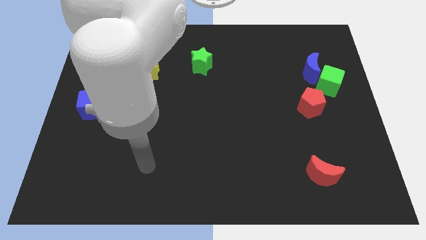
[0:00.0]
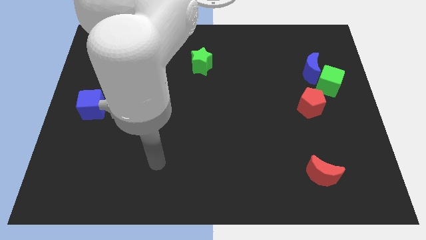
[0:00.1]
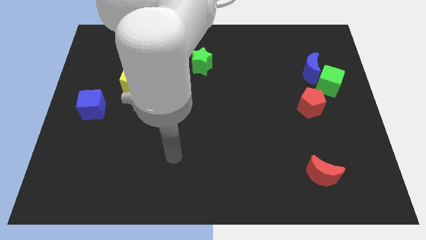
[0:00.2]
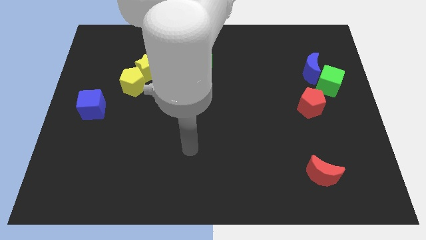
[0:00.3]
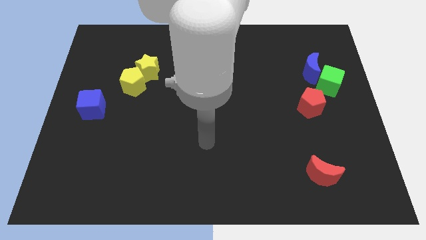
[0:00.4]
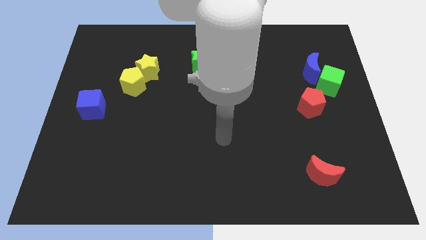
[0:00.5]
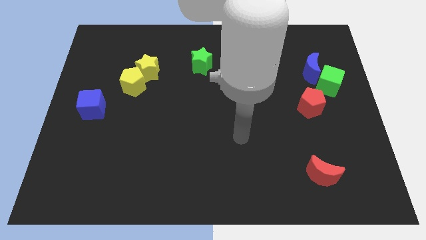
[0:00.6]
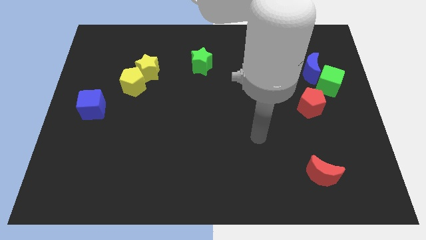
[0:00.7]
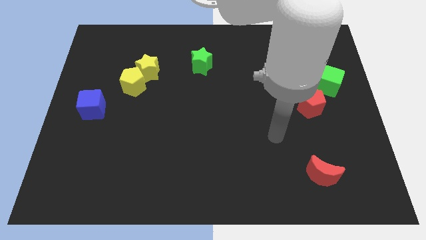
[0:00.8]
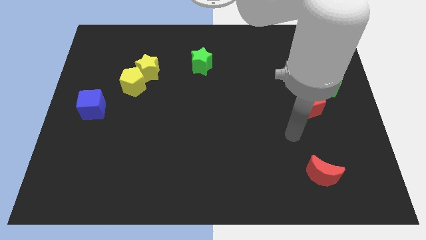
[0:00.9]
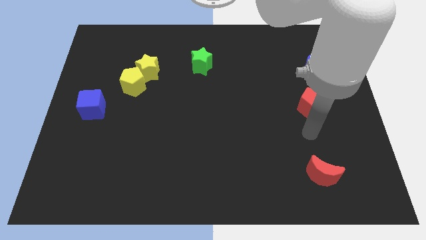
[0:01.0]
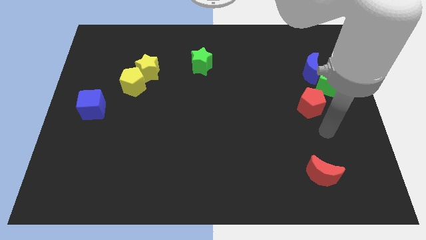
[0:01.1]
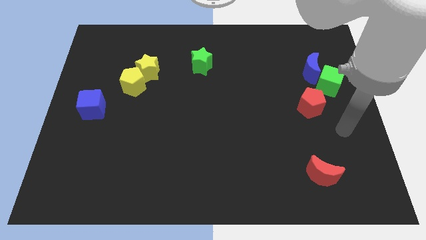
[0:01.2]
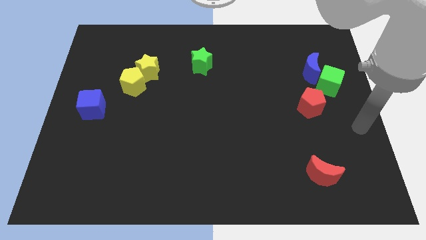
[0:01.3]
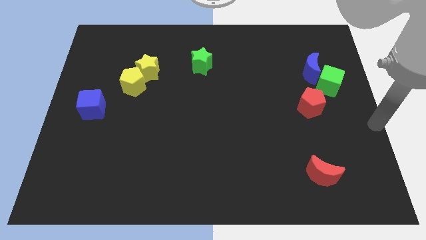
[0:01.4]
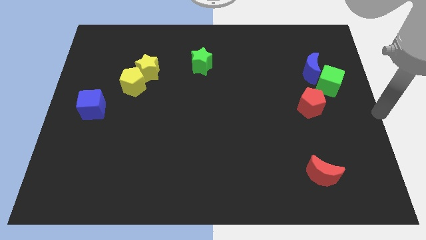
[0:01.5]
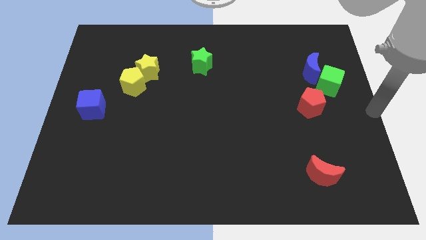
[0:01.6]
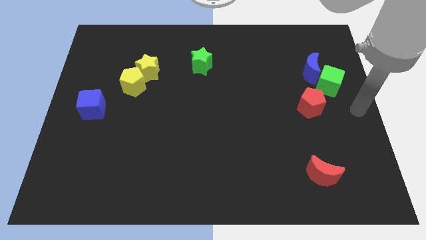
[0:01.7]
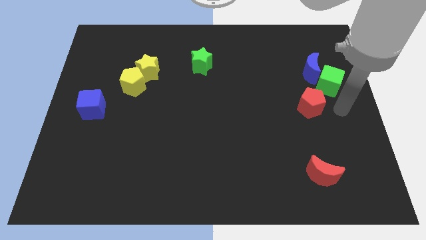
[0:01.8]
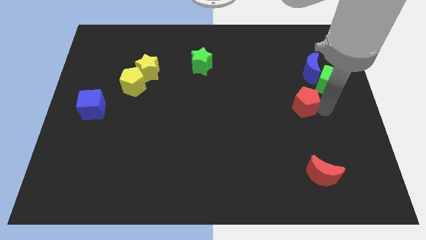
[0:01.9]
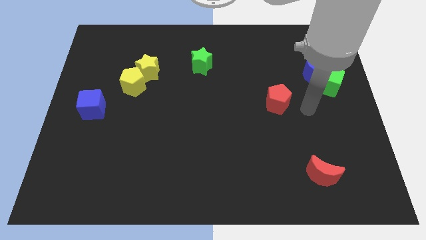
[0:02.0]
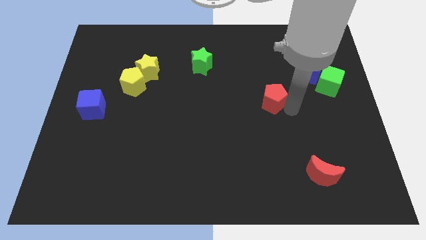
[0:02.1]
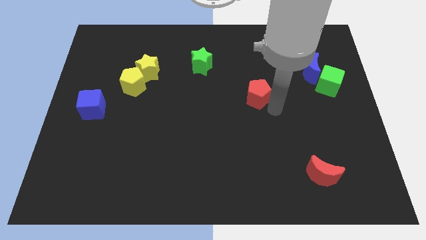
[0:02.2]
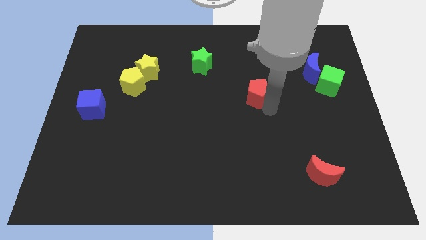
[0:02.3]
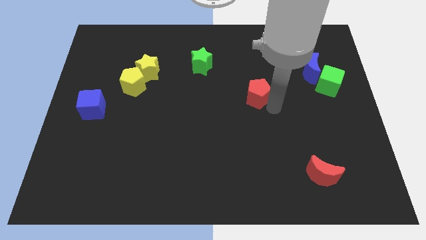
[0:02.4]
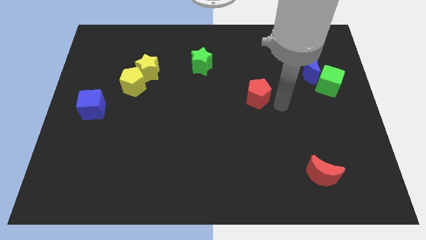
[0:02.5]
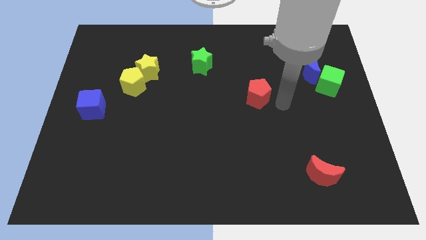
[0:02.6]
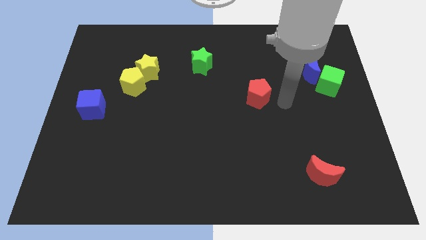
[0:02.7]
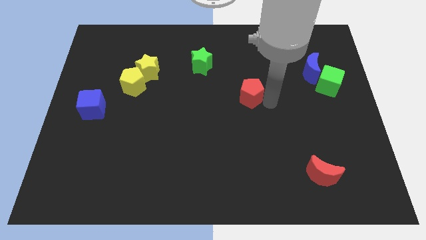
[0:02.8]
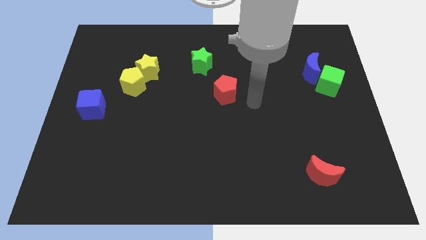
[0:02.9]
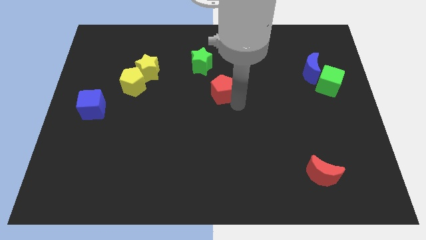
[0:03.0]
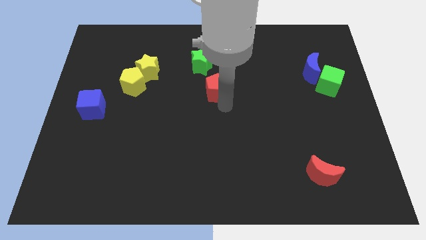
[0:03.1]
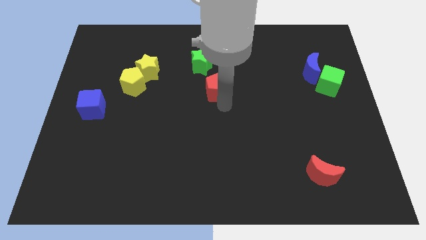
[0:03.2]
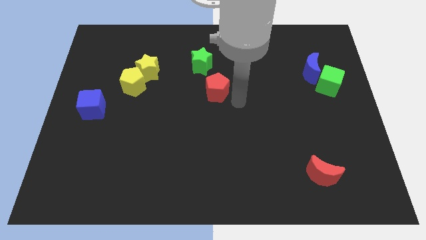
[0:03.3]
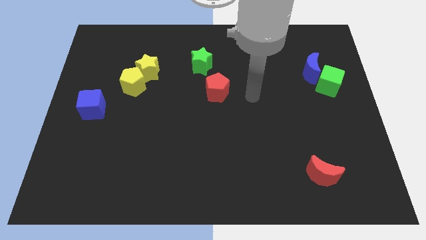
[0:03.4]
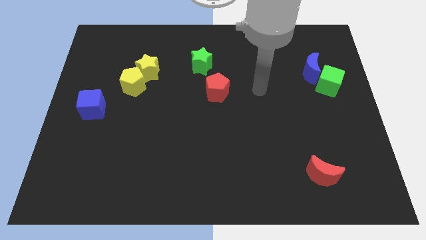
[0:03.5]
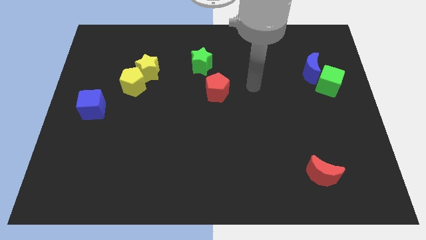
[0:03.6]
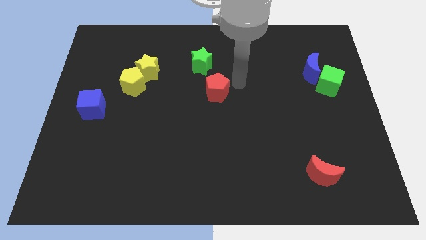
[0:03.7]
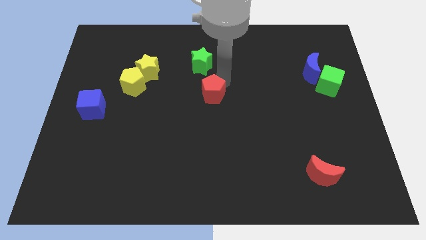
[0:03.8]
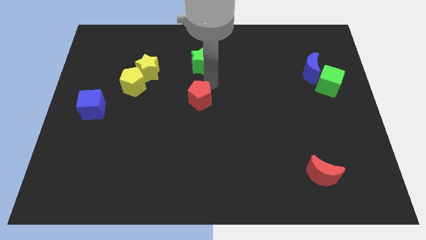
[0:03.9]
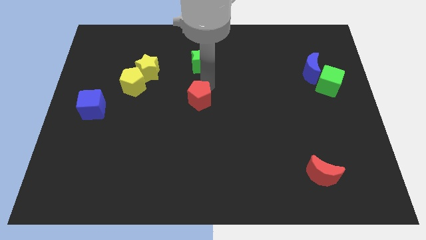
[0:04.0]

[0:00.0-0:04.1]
place the red pentagon below the green star

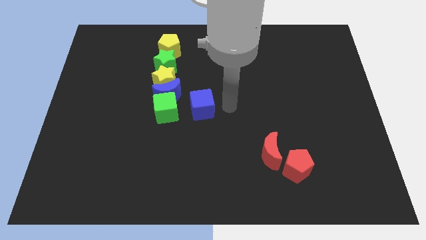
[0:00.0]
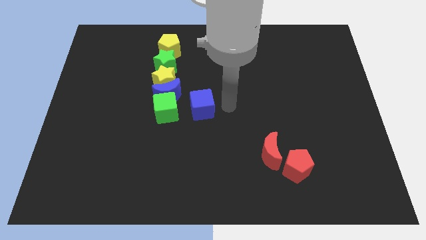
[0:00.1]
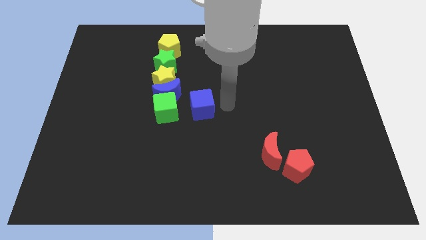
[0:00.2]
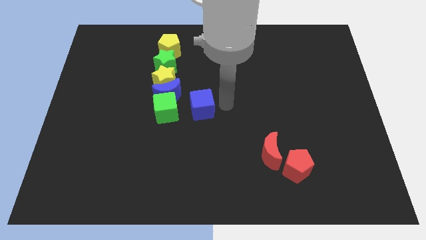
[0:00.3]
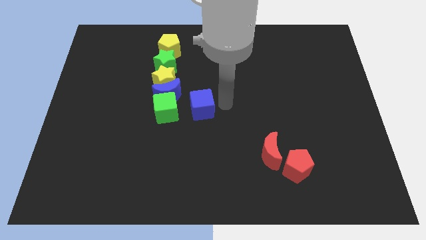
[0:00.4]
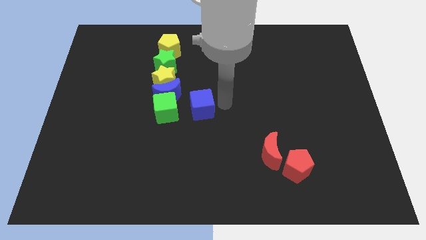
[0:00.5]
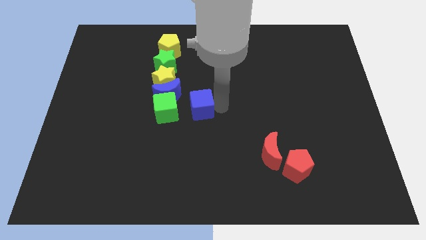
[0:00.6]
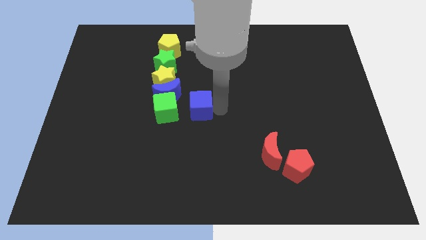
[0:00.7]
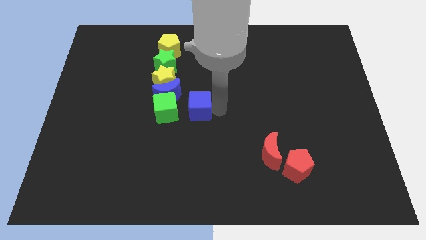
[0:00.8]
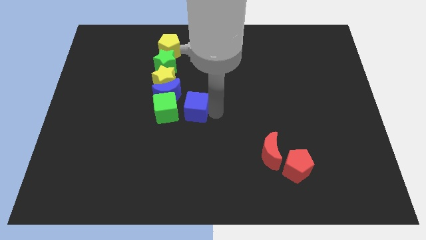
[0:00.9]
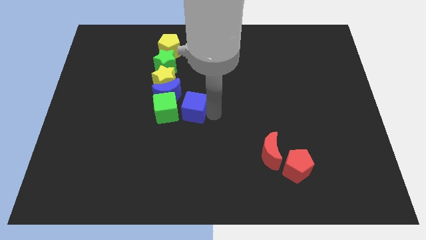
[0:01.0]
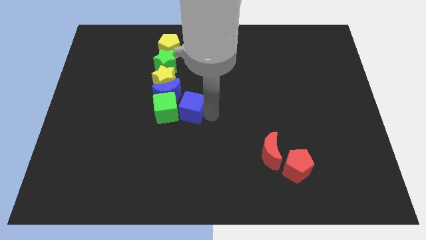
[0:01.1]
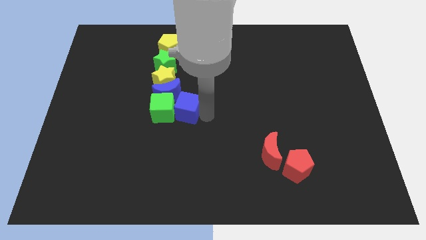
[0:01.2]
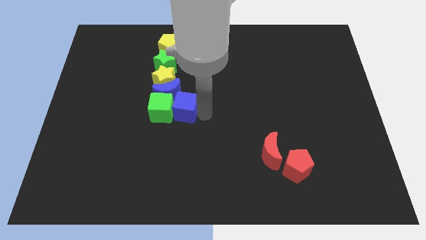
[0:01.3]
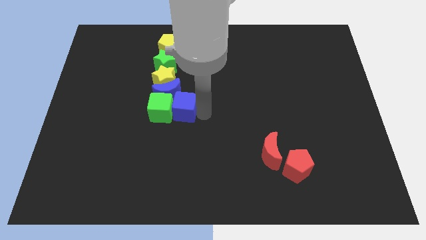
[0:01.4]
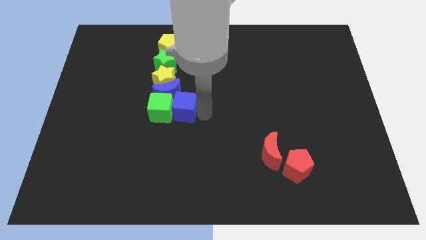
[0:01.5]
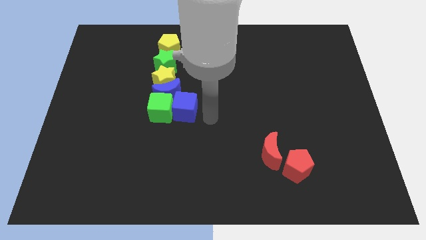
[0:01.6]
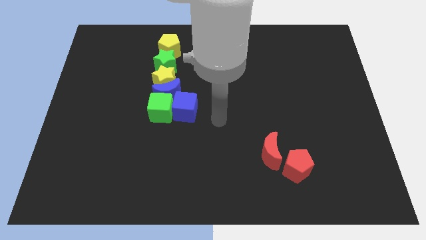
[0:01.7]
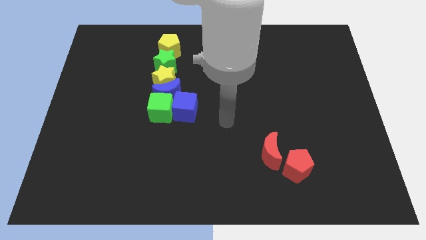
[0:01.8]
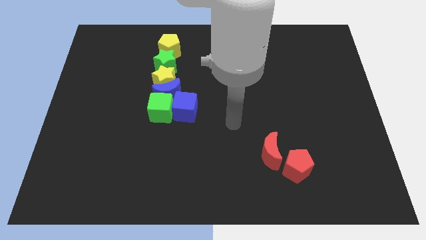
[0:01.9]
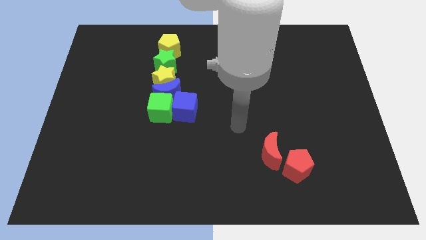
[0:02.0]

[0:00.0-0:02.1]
push blue cube into green cube

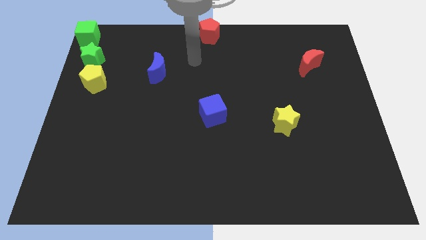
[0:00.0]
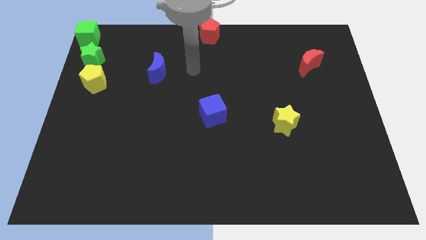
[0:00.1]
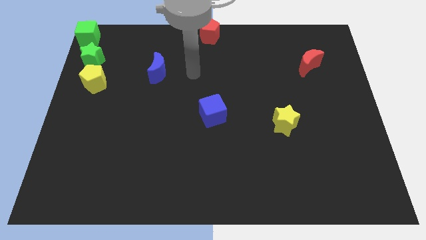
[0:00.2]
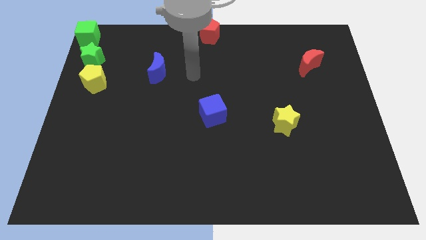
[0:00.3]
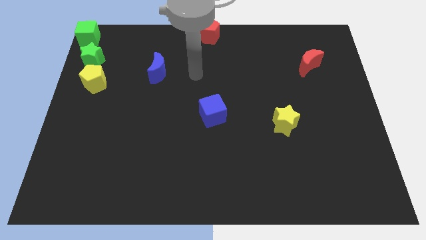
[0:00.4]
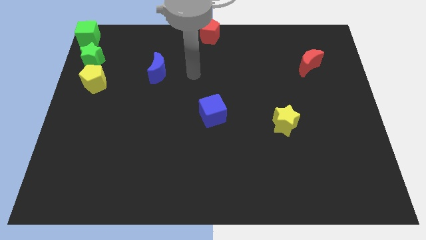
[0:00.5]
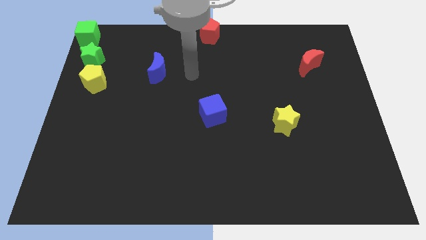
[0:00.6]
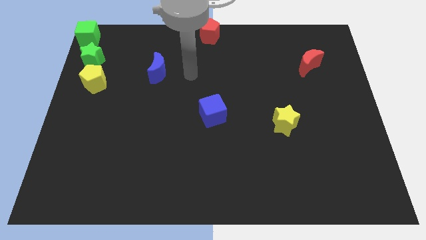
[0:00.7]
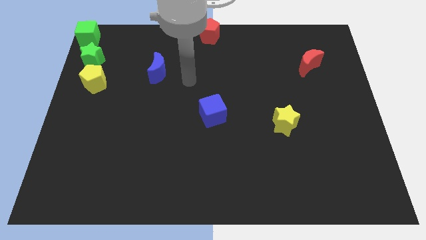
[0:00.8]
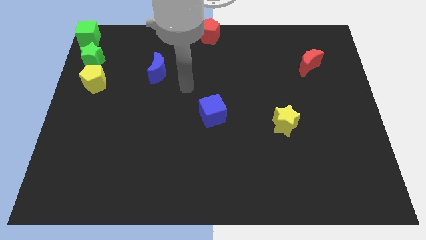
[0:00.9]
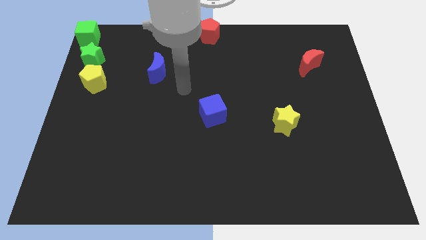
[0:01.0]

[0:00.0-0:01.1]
push your arm in between the blue moon and blue cube

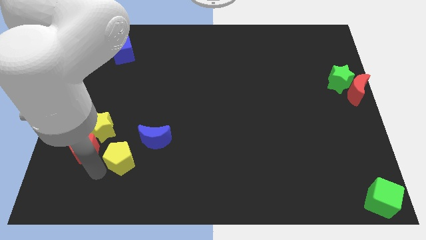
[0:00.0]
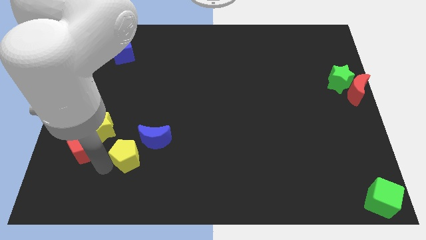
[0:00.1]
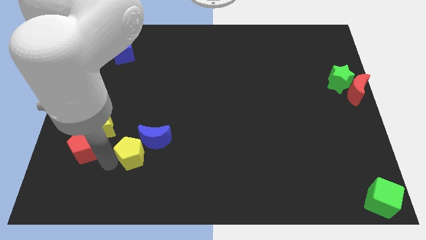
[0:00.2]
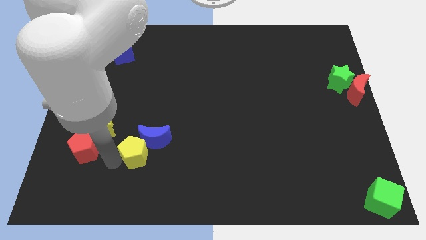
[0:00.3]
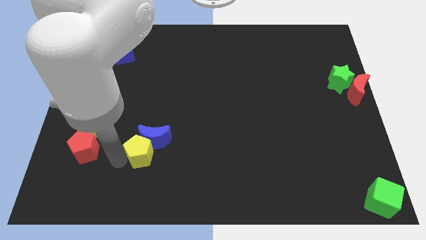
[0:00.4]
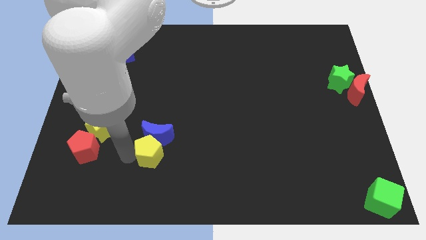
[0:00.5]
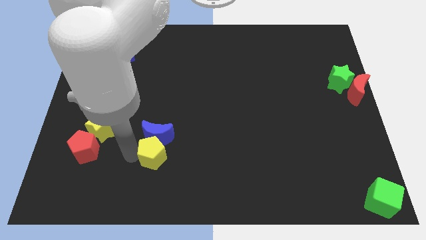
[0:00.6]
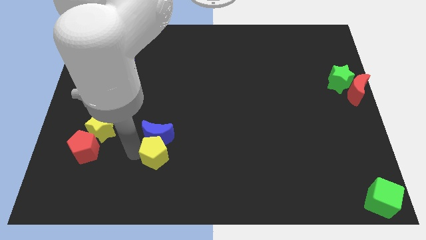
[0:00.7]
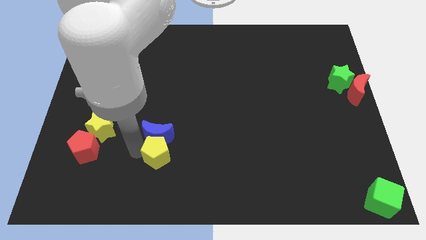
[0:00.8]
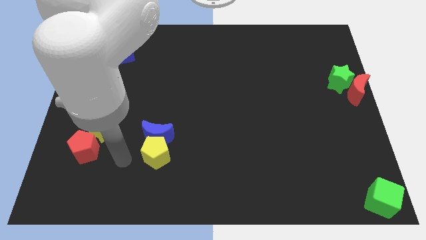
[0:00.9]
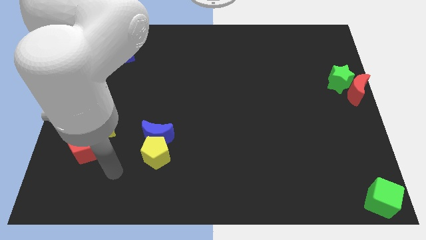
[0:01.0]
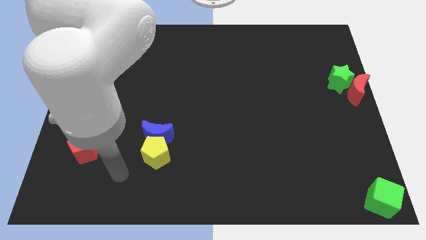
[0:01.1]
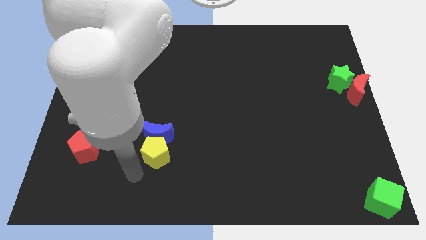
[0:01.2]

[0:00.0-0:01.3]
push the yellow pentagon into the blue moon

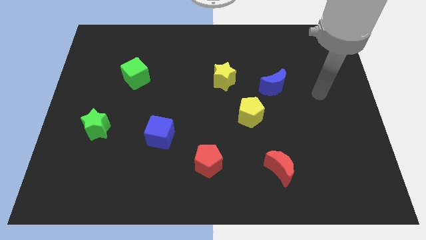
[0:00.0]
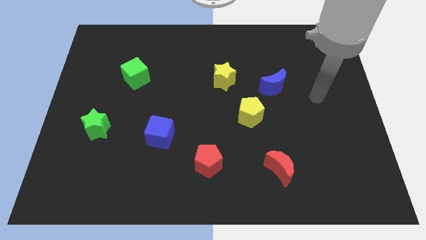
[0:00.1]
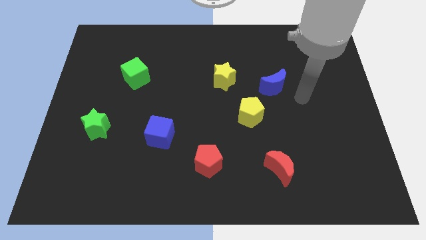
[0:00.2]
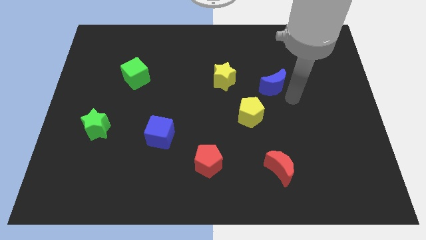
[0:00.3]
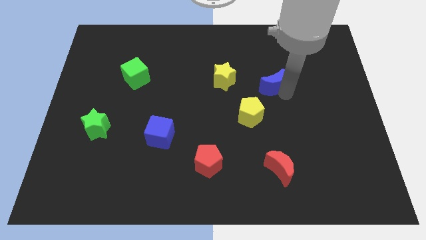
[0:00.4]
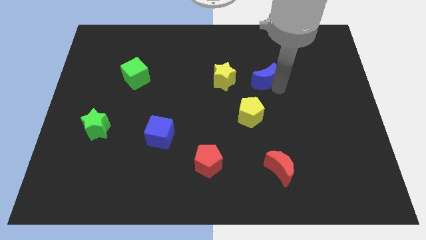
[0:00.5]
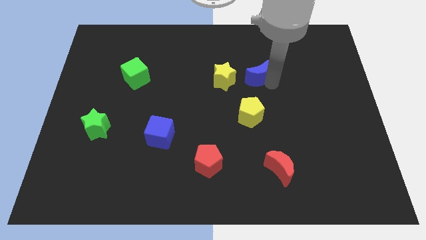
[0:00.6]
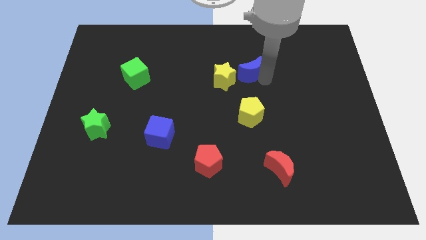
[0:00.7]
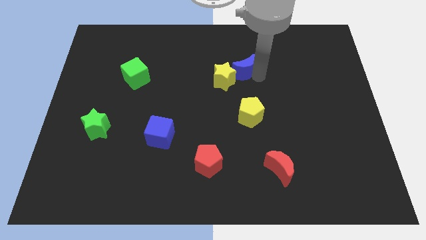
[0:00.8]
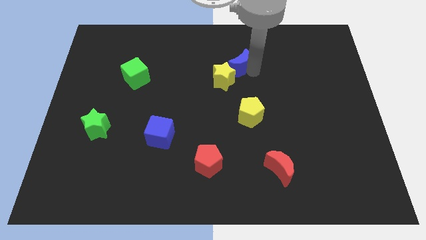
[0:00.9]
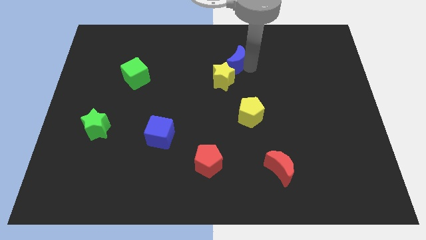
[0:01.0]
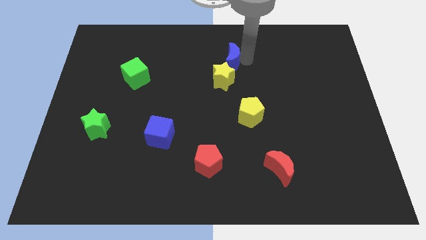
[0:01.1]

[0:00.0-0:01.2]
push the blue moon to the top of the yellow star
